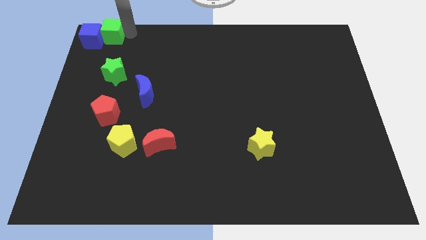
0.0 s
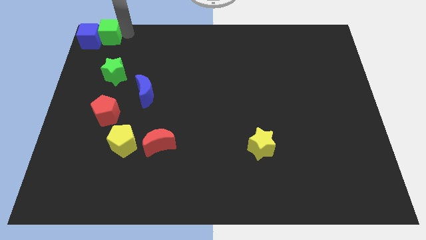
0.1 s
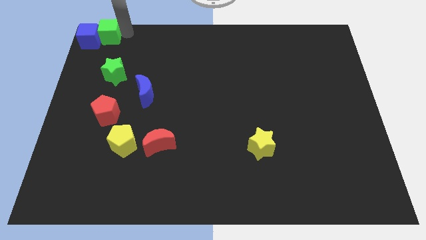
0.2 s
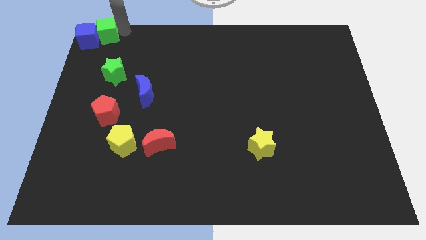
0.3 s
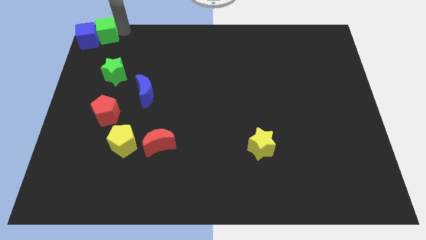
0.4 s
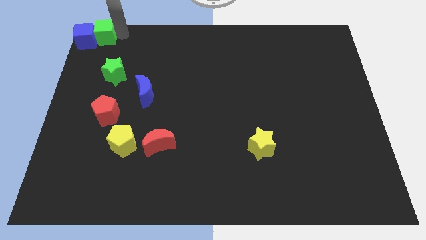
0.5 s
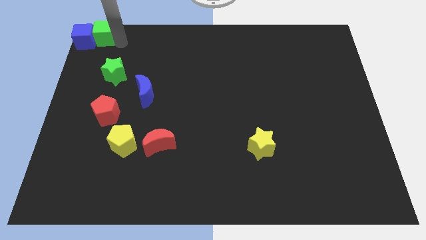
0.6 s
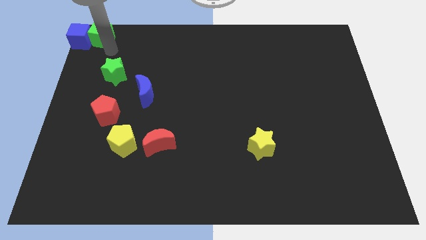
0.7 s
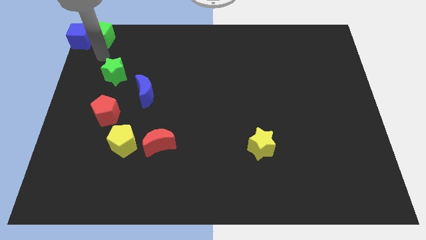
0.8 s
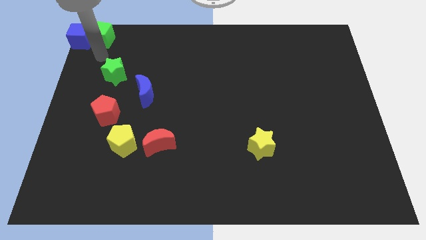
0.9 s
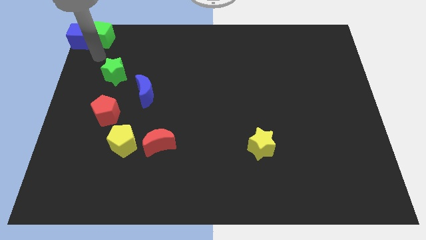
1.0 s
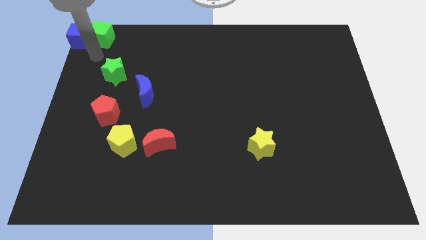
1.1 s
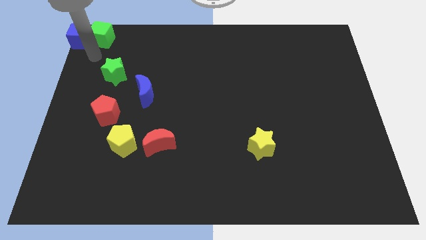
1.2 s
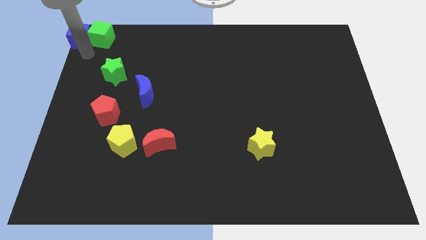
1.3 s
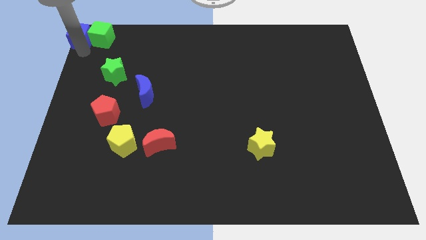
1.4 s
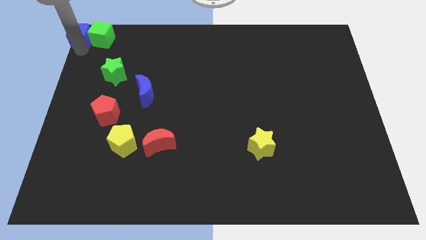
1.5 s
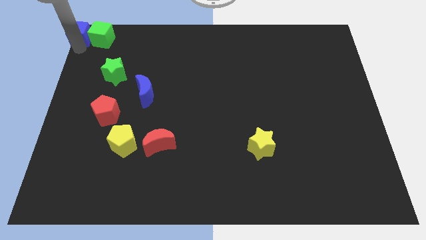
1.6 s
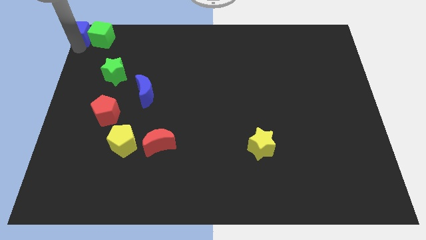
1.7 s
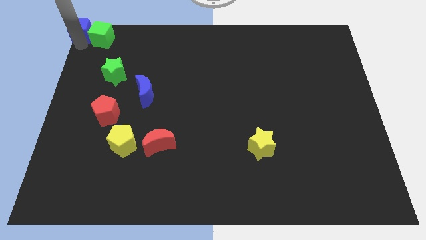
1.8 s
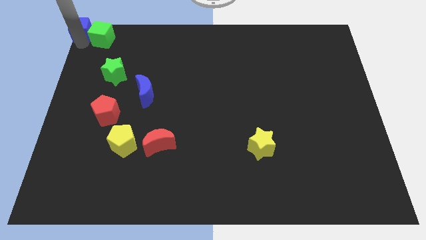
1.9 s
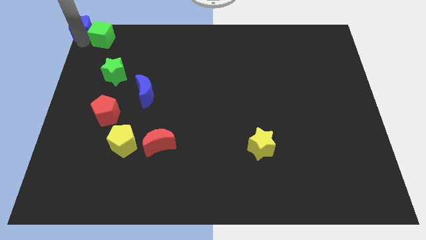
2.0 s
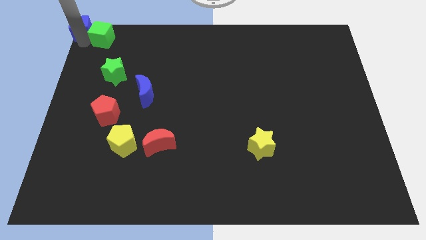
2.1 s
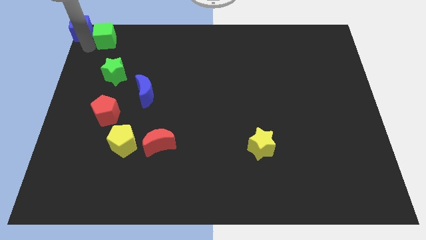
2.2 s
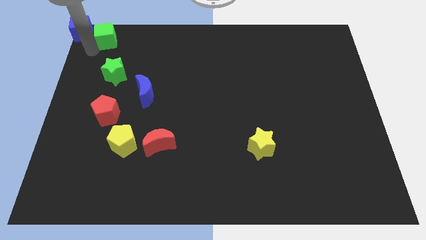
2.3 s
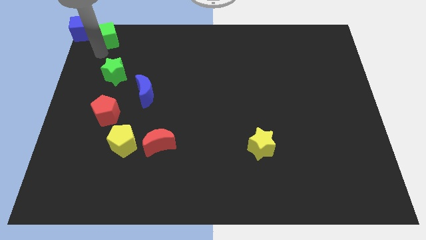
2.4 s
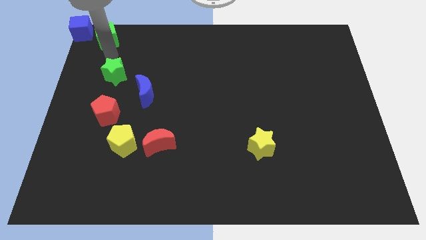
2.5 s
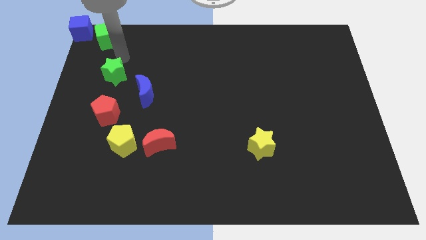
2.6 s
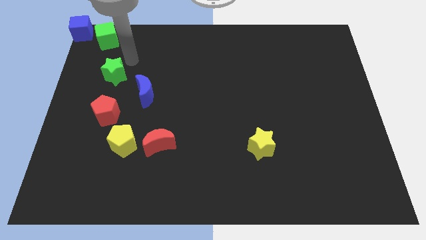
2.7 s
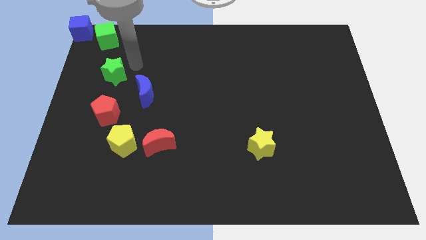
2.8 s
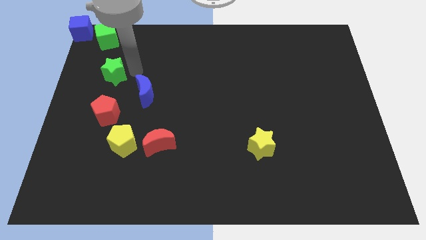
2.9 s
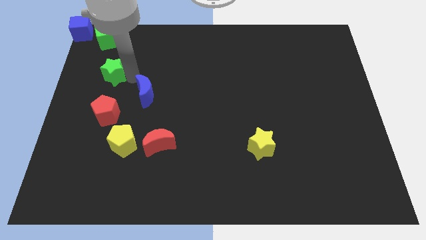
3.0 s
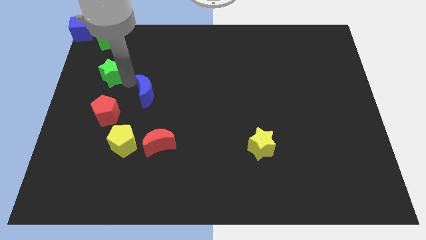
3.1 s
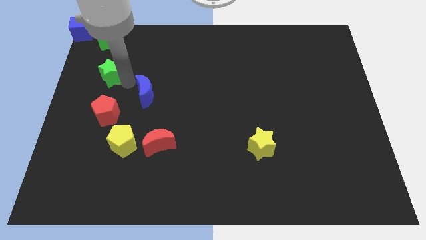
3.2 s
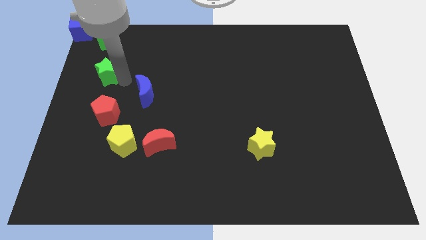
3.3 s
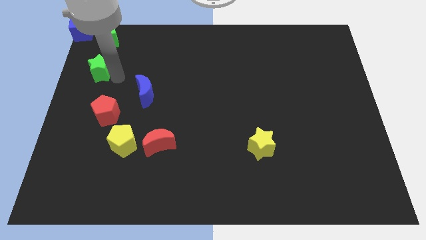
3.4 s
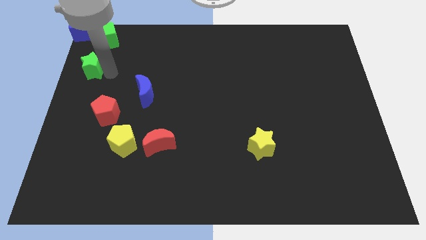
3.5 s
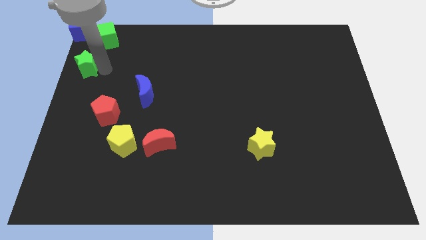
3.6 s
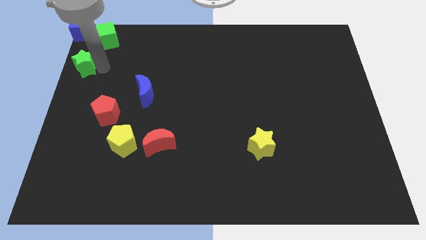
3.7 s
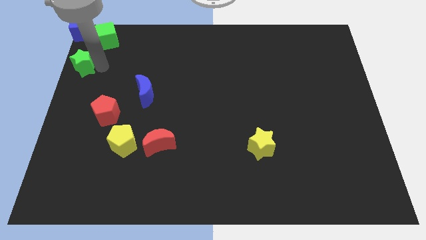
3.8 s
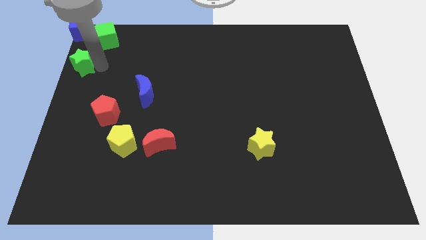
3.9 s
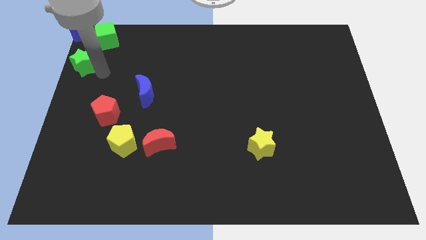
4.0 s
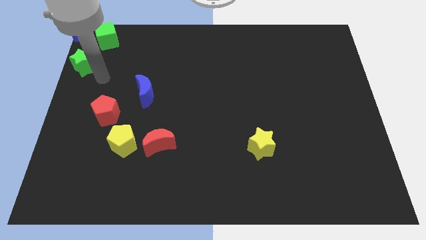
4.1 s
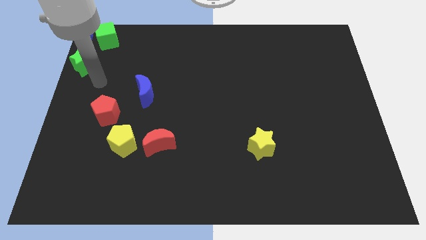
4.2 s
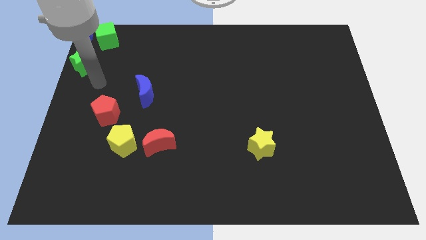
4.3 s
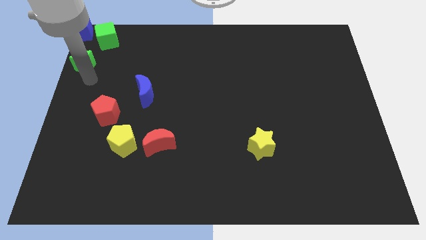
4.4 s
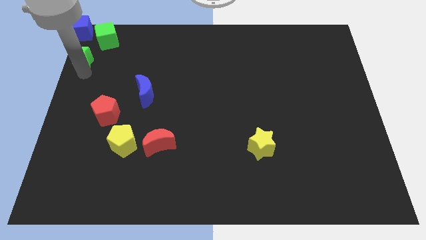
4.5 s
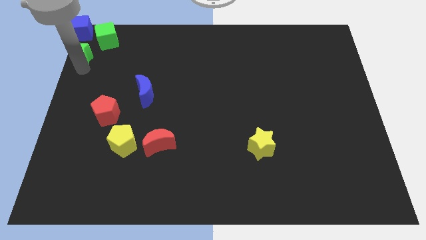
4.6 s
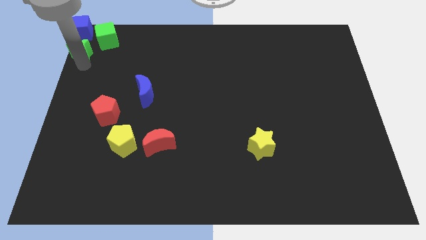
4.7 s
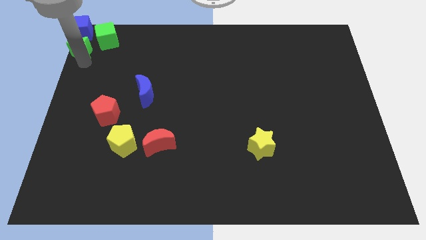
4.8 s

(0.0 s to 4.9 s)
place the green star below the blue cube

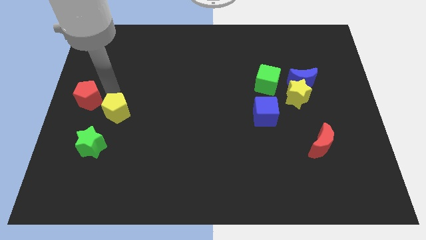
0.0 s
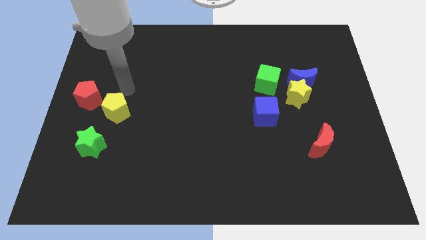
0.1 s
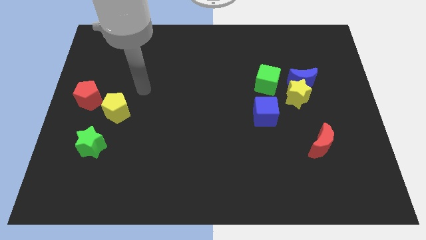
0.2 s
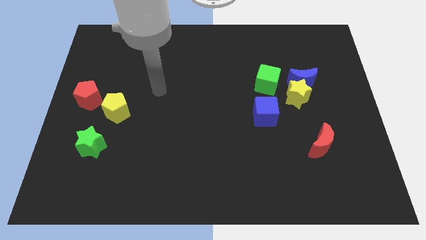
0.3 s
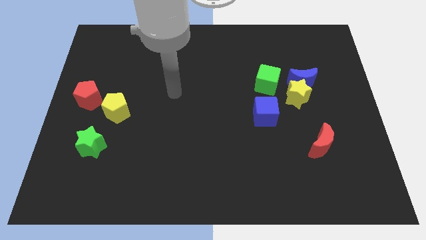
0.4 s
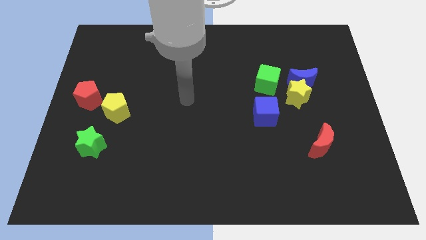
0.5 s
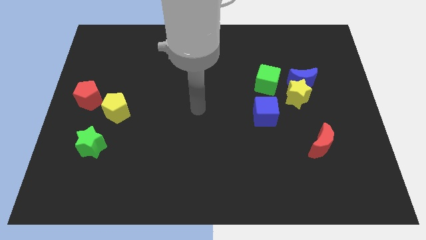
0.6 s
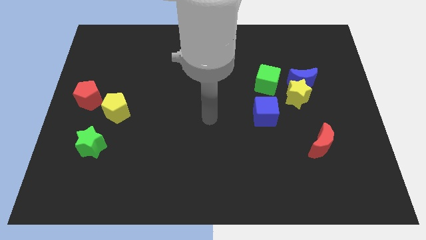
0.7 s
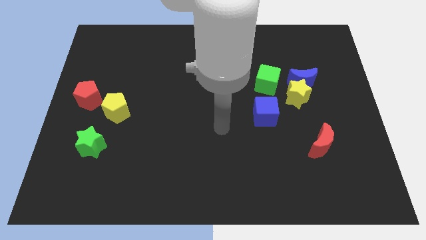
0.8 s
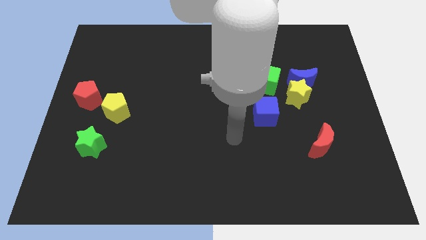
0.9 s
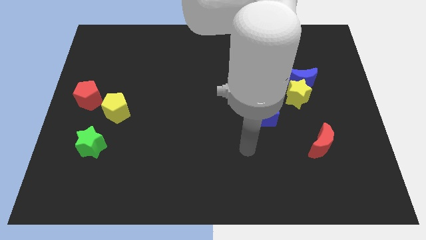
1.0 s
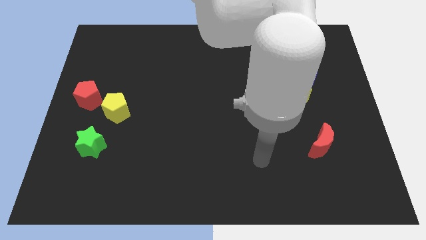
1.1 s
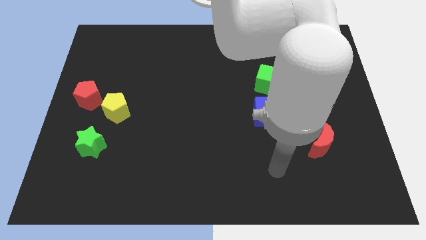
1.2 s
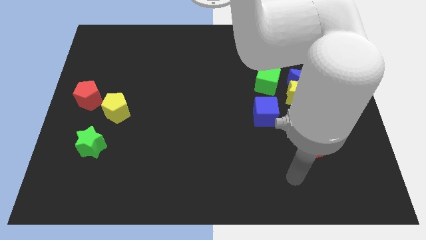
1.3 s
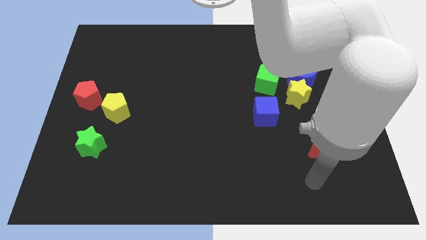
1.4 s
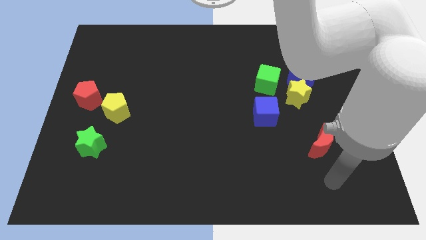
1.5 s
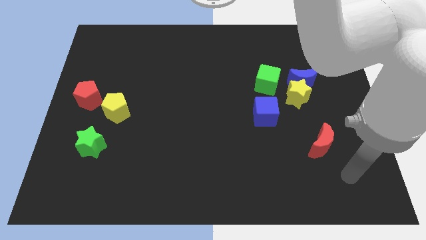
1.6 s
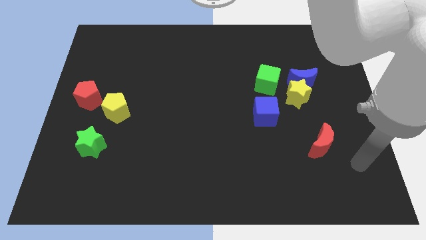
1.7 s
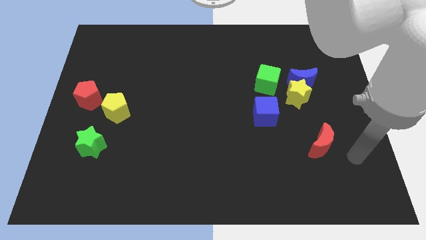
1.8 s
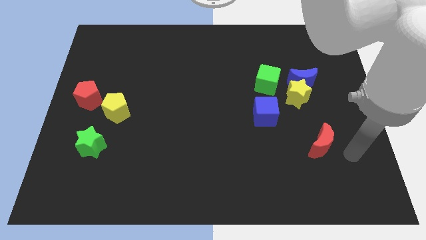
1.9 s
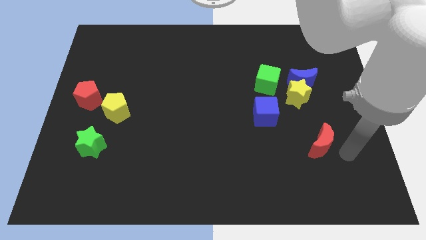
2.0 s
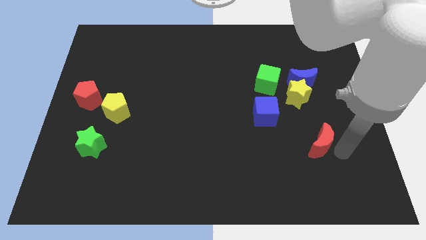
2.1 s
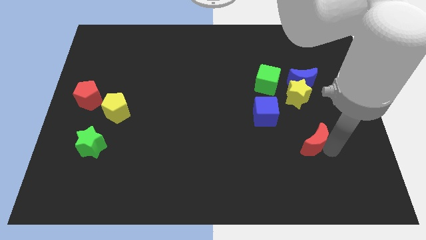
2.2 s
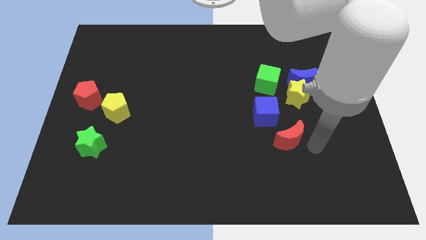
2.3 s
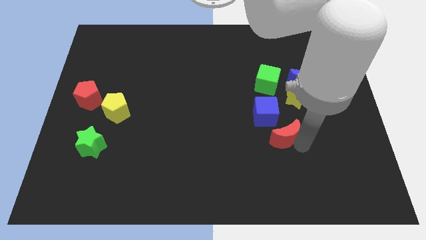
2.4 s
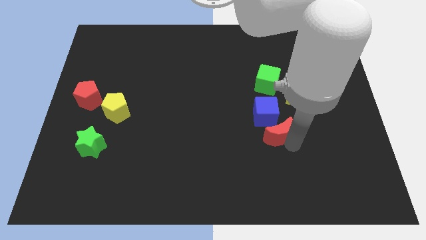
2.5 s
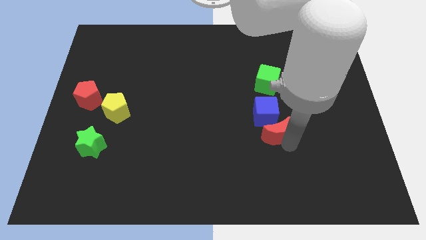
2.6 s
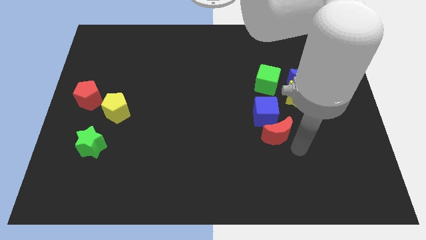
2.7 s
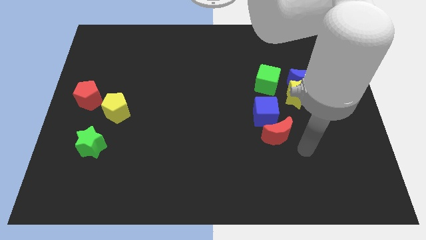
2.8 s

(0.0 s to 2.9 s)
push red moon near blue cube

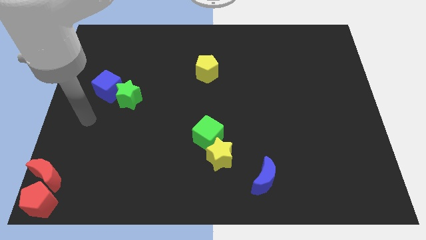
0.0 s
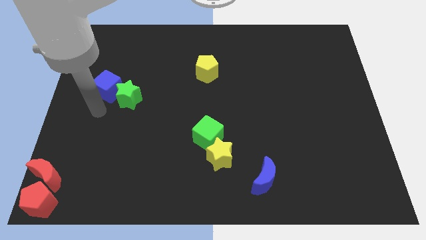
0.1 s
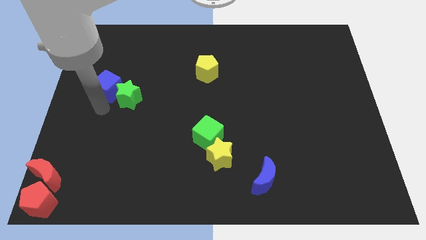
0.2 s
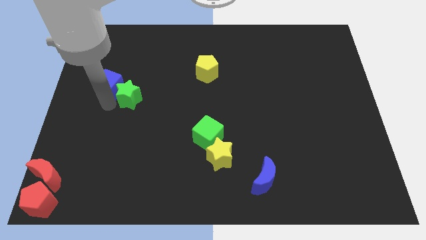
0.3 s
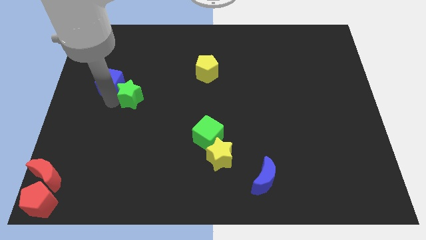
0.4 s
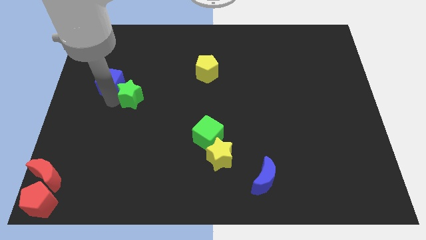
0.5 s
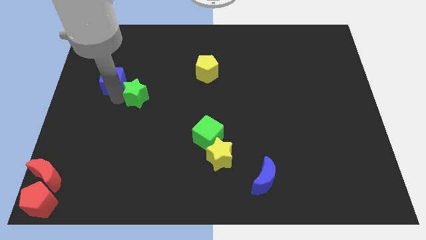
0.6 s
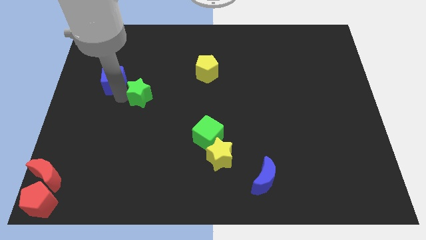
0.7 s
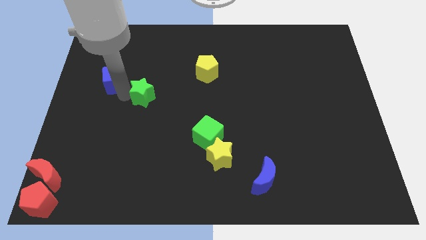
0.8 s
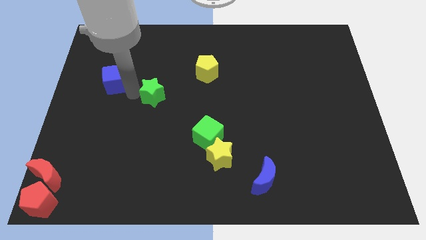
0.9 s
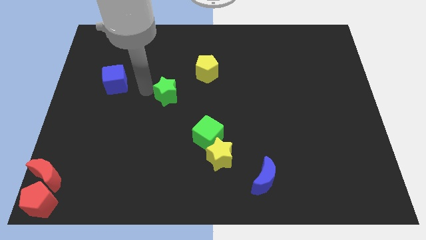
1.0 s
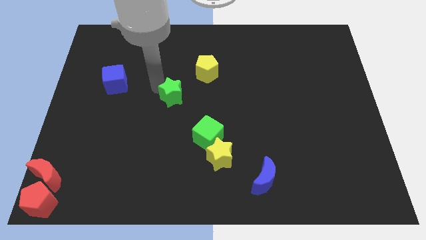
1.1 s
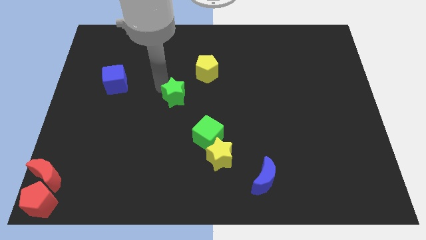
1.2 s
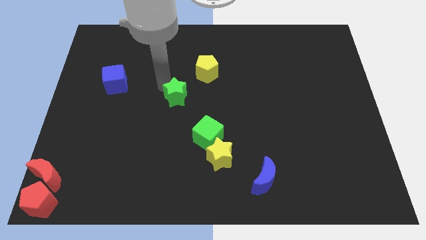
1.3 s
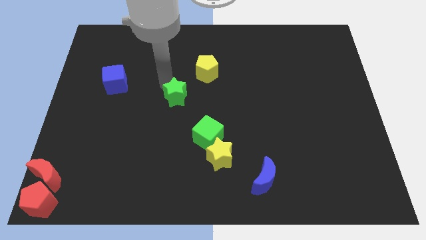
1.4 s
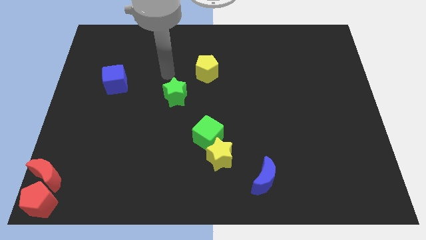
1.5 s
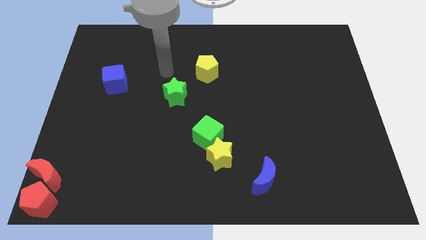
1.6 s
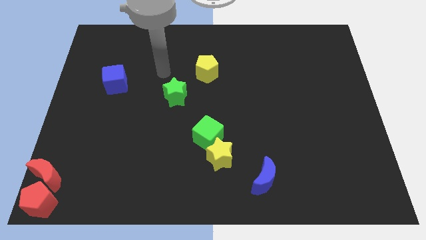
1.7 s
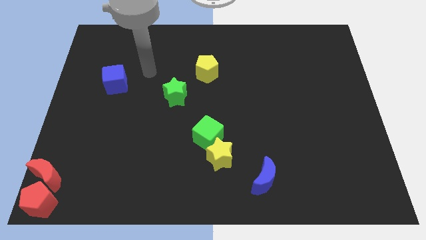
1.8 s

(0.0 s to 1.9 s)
separate the green star from blue cube
